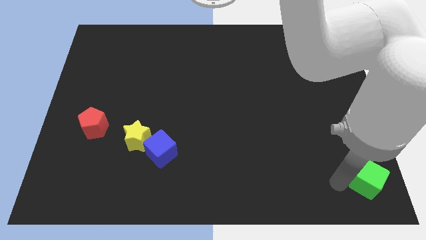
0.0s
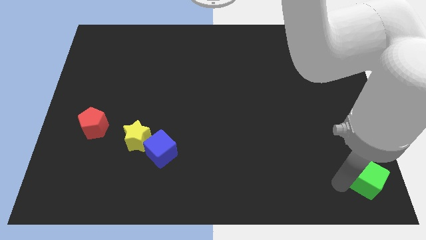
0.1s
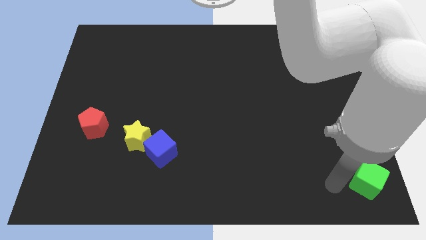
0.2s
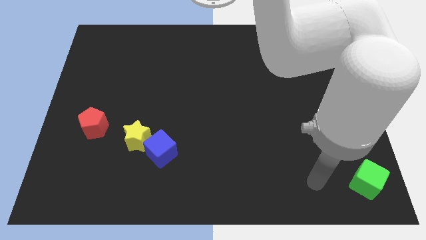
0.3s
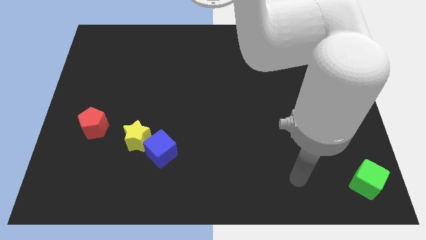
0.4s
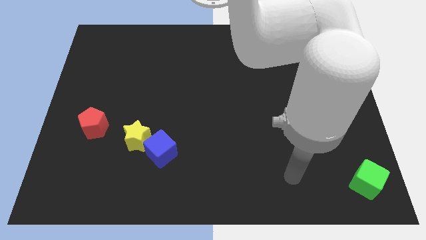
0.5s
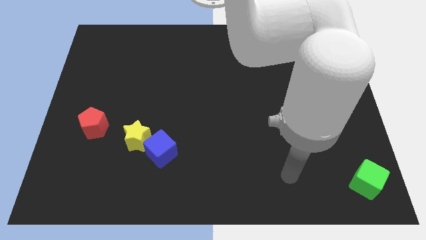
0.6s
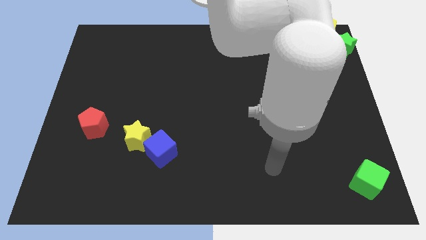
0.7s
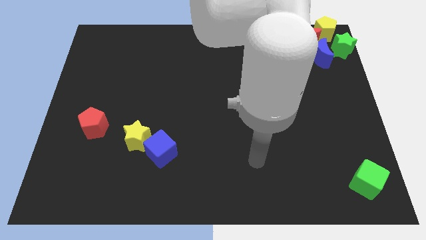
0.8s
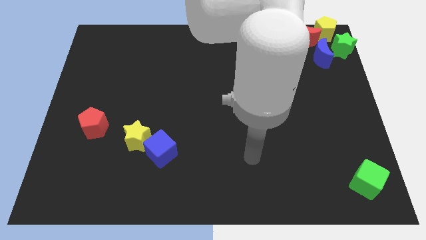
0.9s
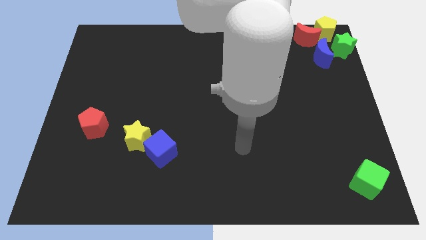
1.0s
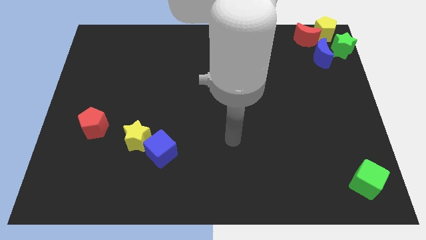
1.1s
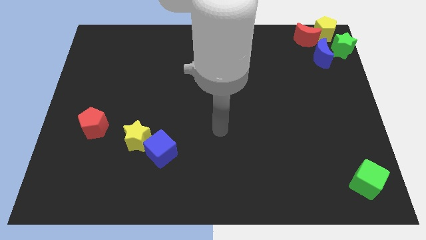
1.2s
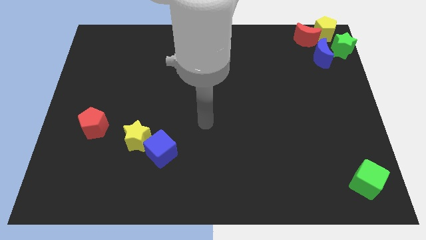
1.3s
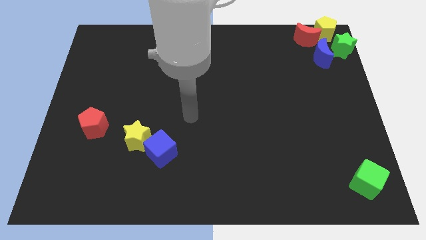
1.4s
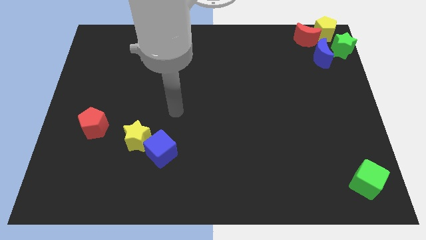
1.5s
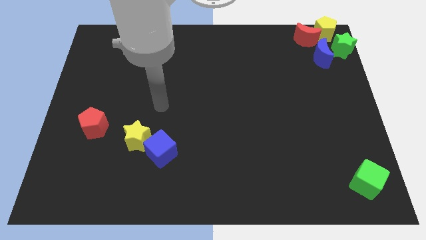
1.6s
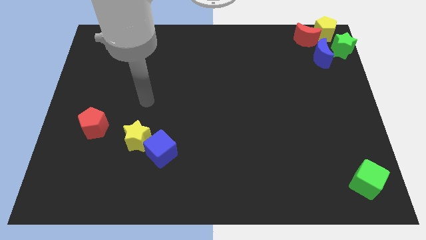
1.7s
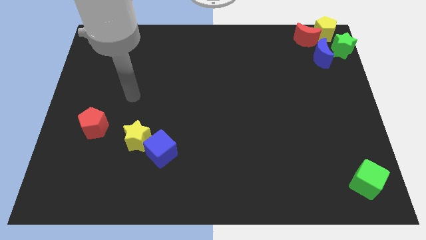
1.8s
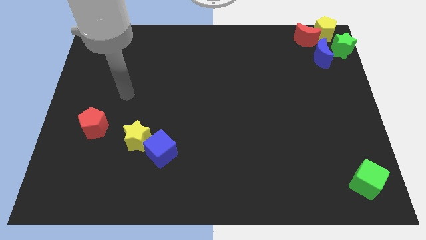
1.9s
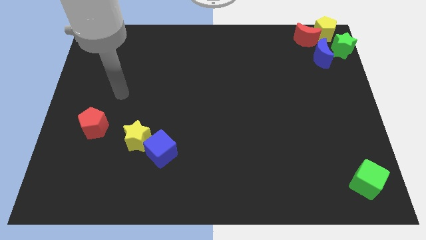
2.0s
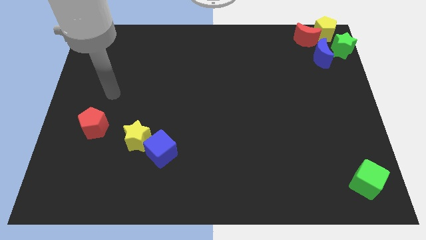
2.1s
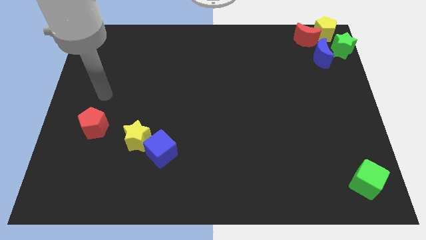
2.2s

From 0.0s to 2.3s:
move your arm above red pentagon

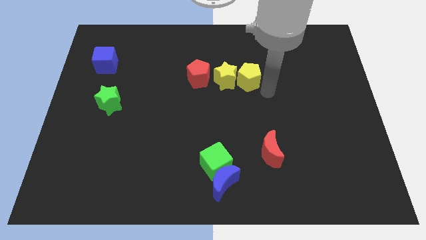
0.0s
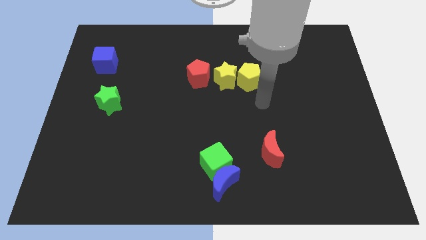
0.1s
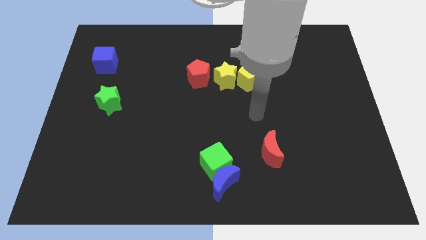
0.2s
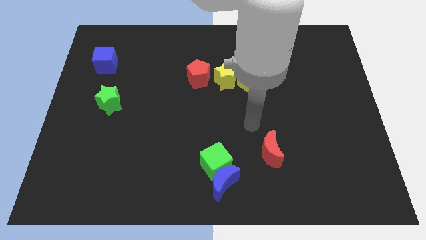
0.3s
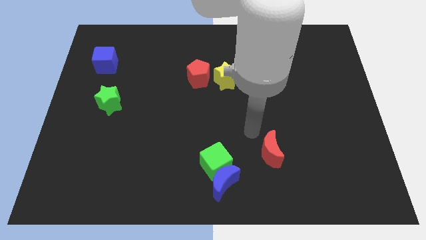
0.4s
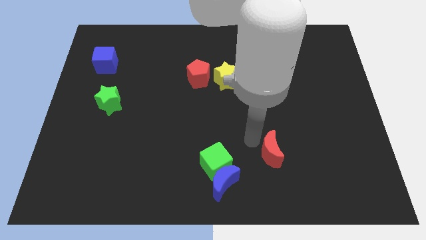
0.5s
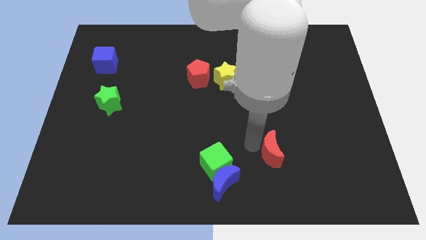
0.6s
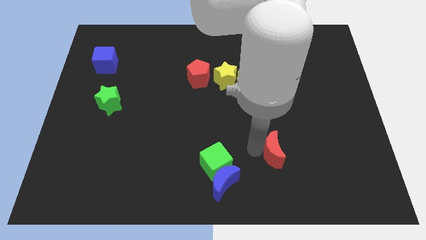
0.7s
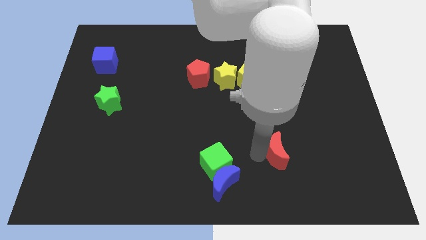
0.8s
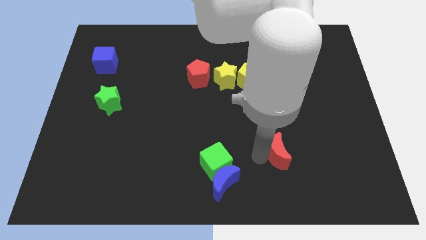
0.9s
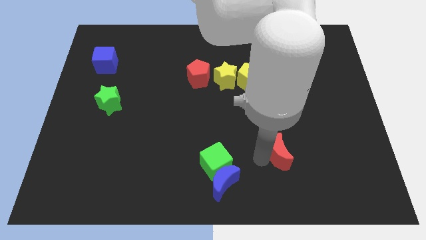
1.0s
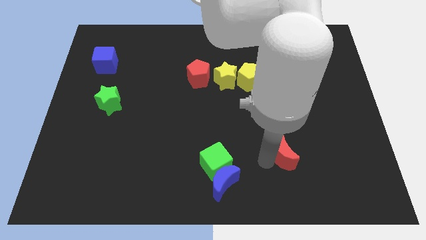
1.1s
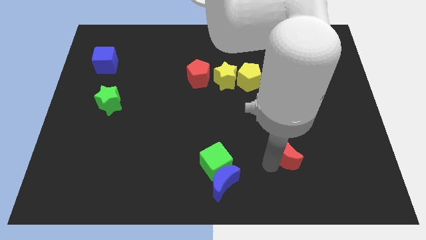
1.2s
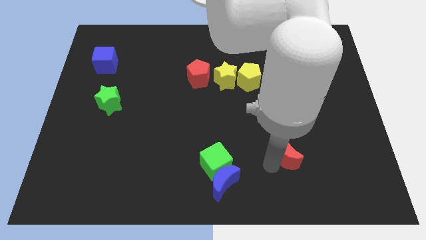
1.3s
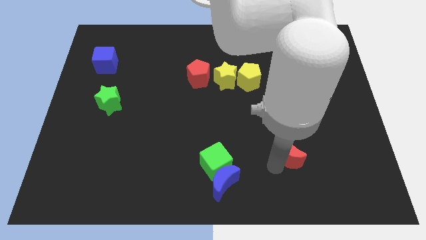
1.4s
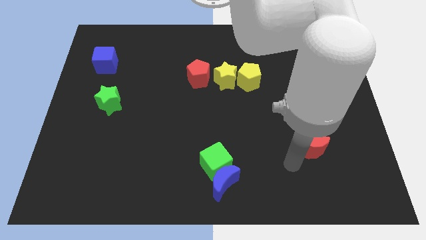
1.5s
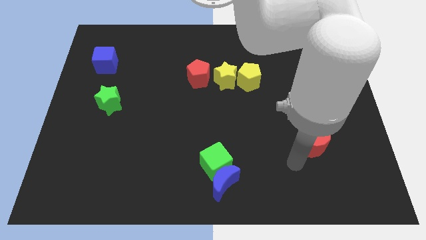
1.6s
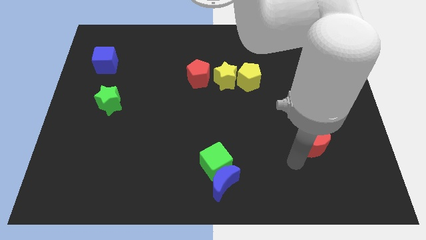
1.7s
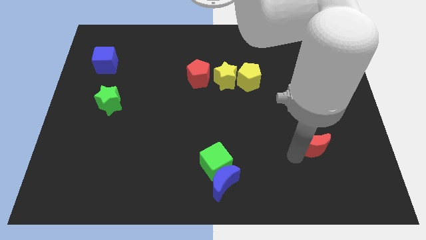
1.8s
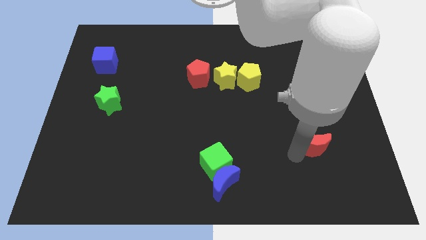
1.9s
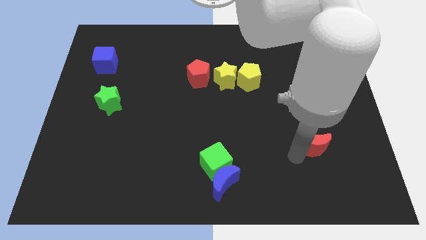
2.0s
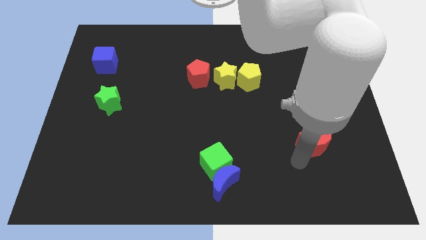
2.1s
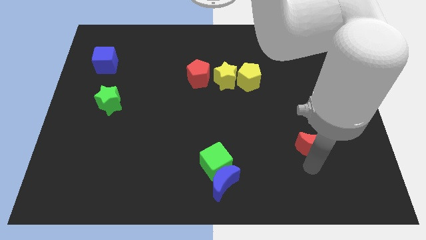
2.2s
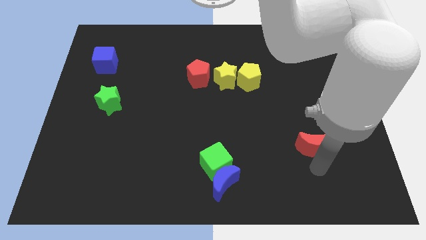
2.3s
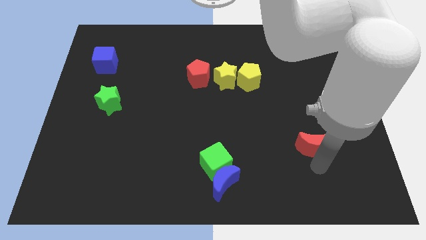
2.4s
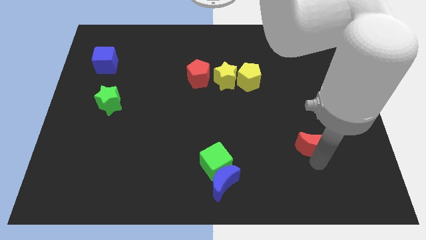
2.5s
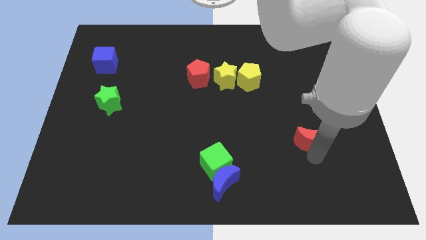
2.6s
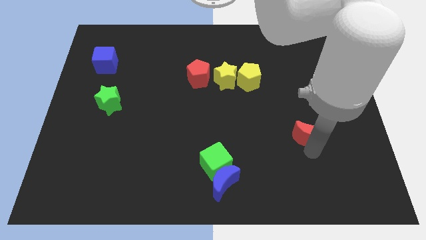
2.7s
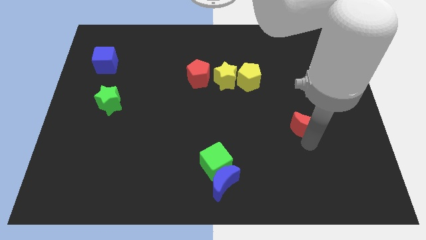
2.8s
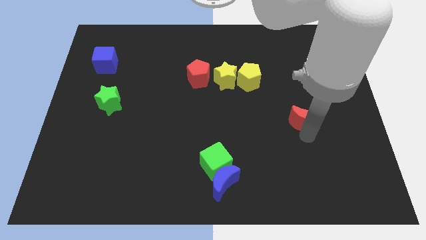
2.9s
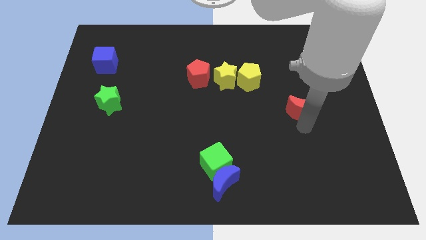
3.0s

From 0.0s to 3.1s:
move the red moon diagonally top right to the green cube

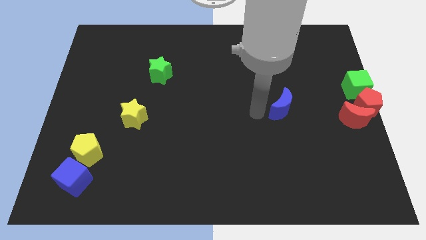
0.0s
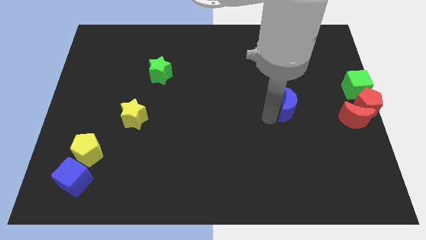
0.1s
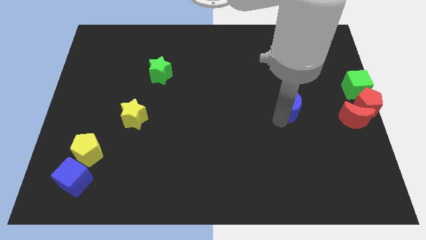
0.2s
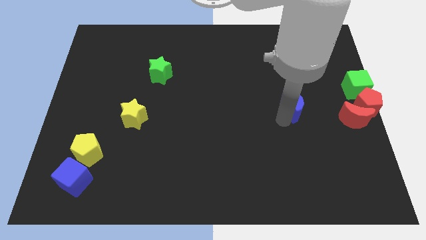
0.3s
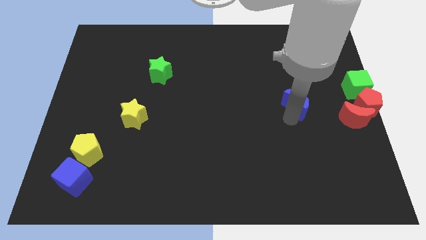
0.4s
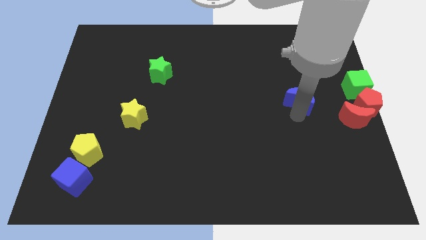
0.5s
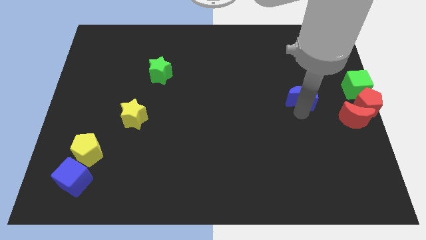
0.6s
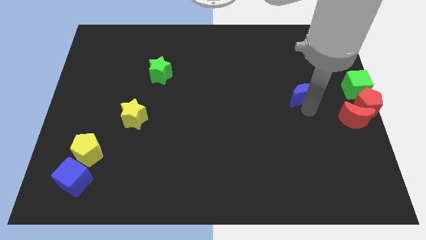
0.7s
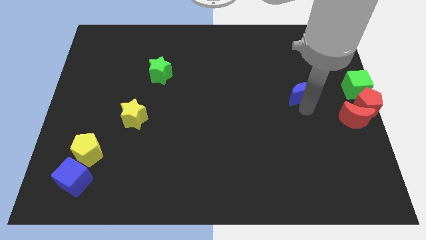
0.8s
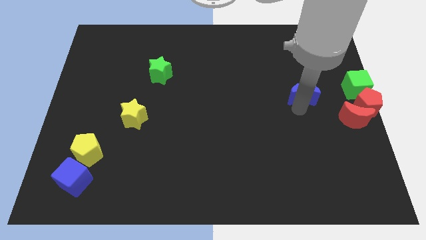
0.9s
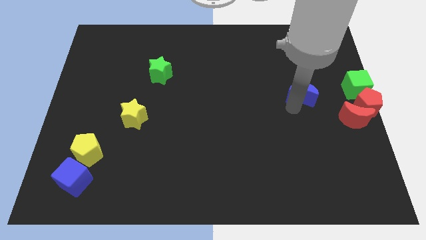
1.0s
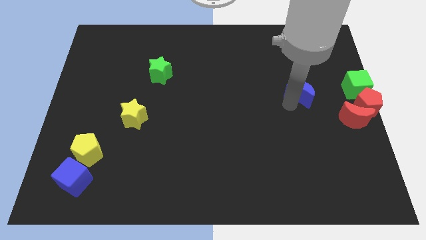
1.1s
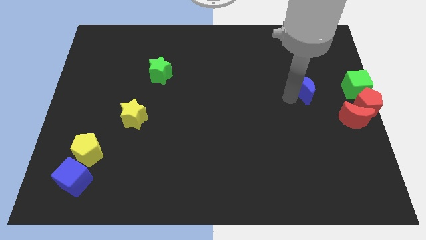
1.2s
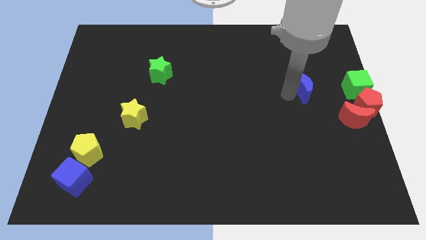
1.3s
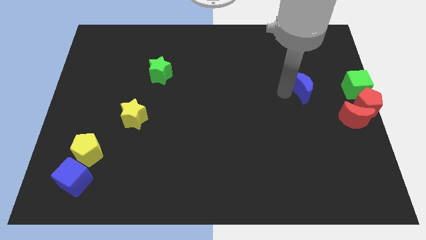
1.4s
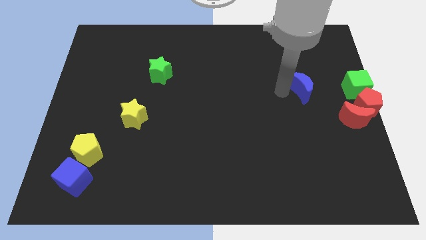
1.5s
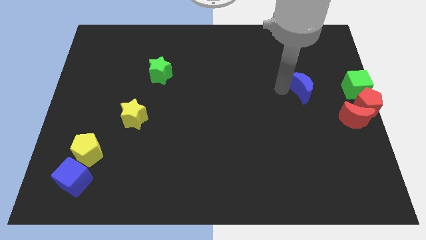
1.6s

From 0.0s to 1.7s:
move the blue moon to the left of the green cube

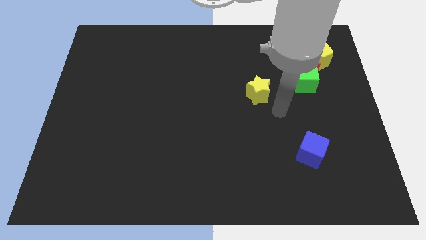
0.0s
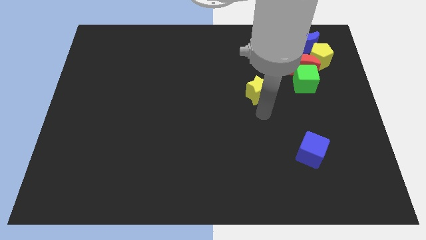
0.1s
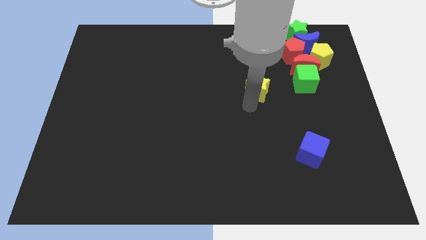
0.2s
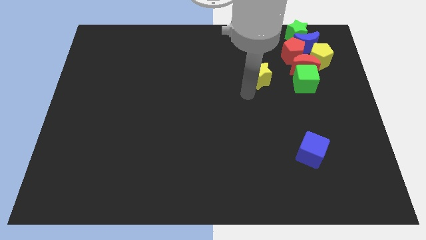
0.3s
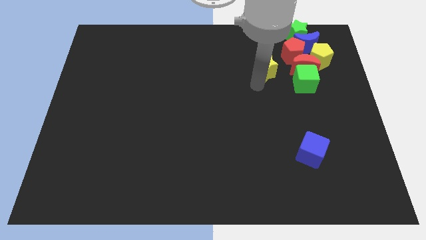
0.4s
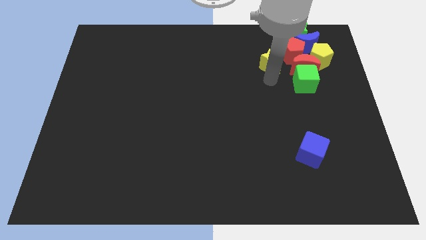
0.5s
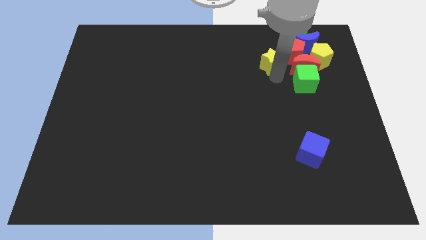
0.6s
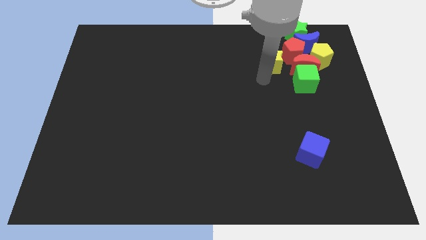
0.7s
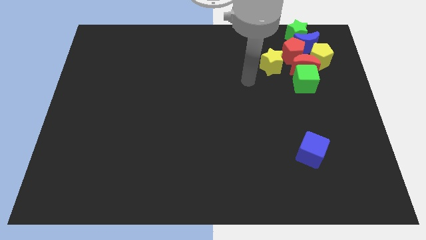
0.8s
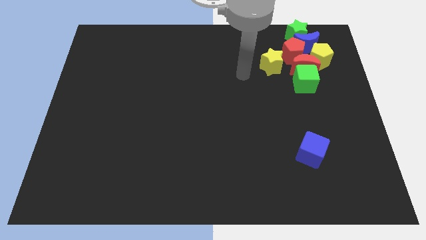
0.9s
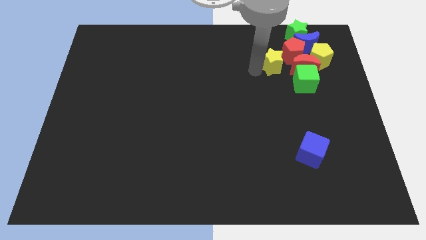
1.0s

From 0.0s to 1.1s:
move the yellow star left to the red pentagon

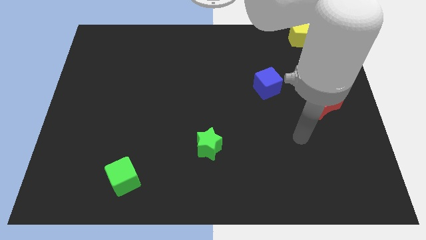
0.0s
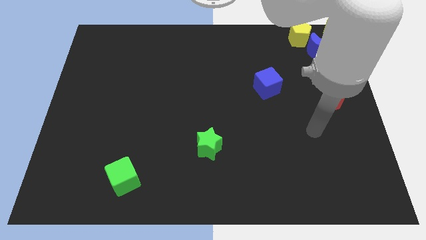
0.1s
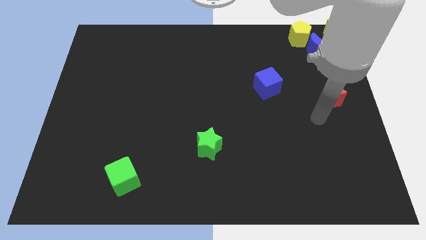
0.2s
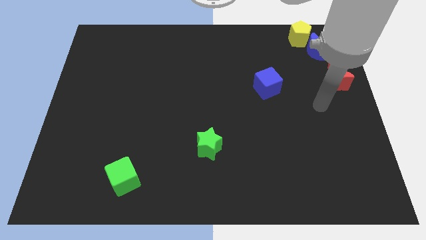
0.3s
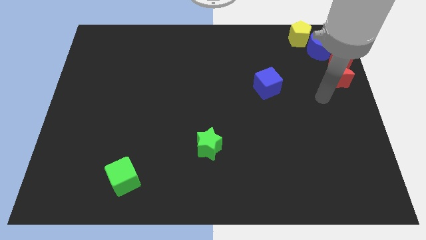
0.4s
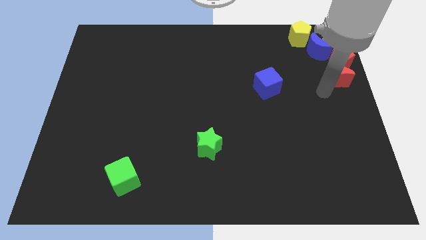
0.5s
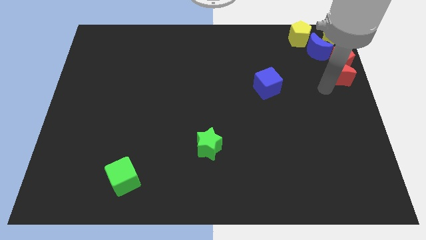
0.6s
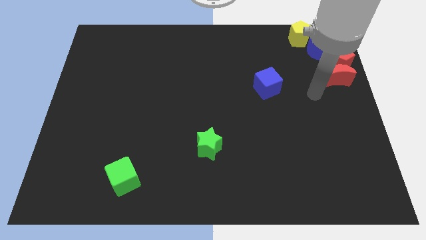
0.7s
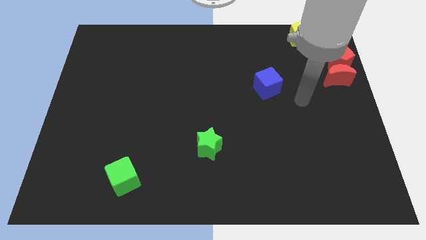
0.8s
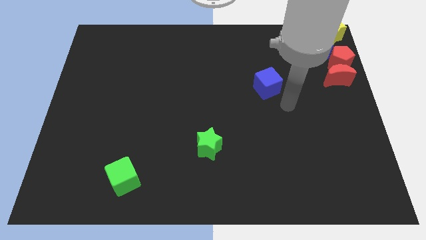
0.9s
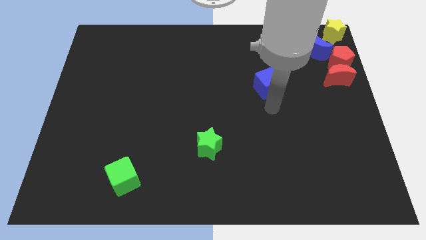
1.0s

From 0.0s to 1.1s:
move the red crescent below the red pentagon
